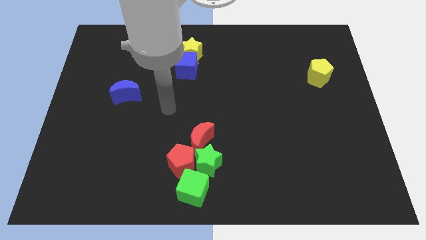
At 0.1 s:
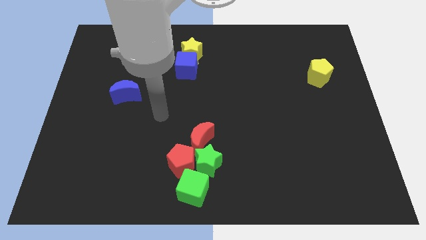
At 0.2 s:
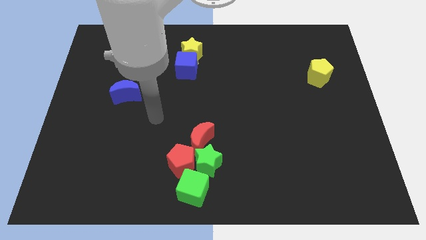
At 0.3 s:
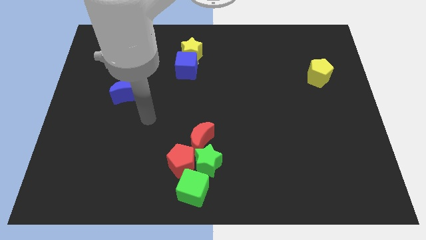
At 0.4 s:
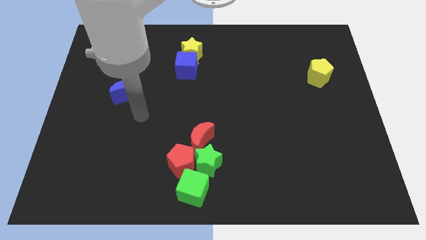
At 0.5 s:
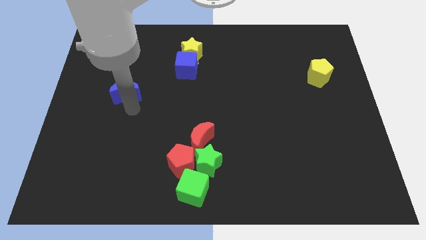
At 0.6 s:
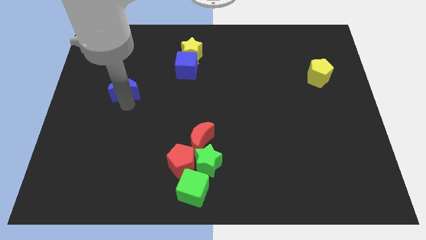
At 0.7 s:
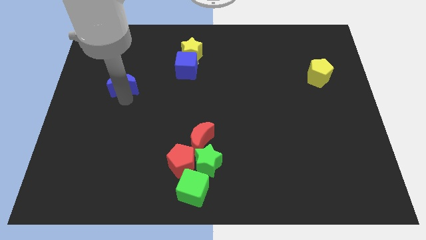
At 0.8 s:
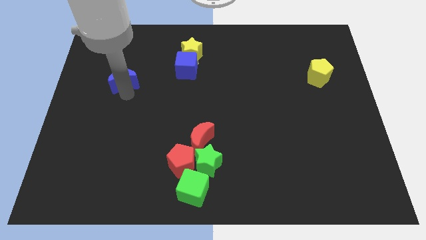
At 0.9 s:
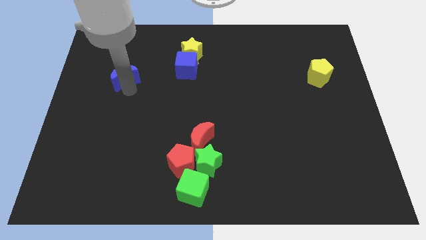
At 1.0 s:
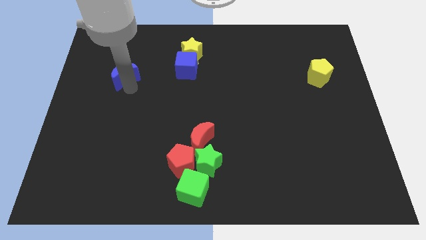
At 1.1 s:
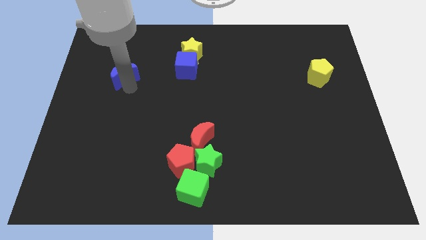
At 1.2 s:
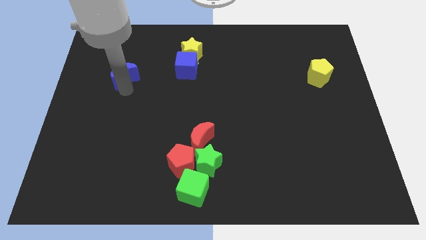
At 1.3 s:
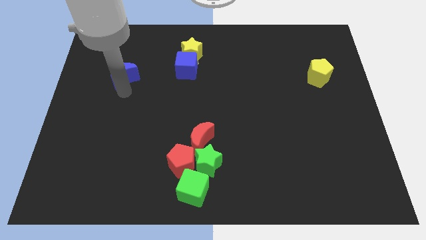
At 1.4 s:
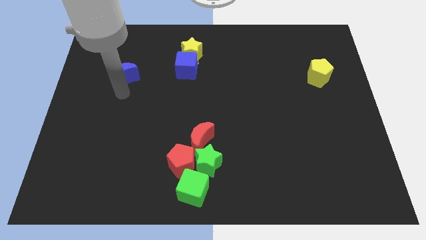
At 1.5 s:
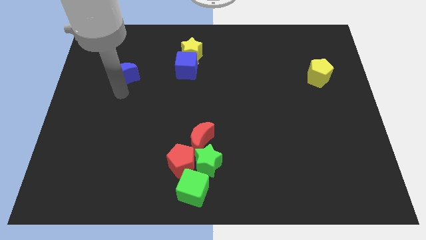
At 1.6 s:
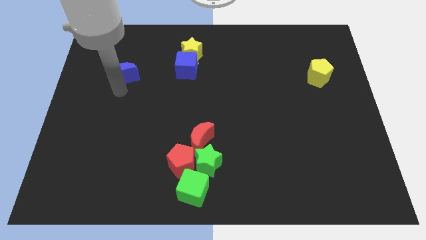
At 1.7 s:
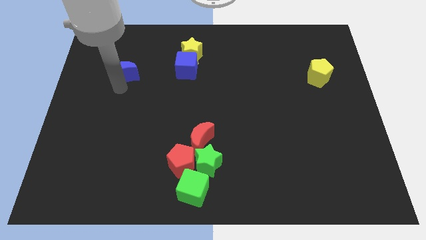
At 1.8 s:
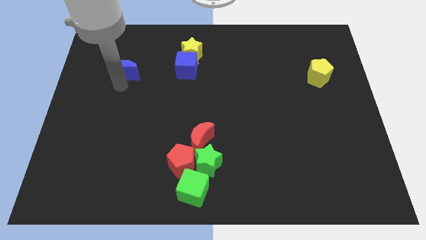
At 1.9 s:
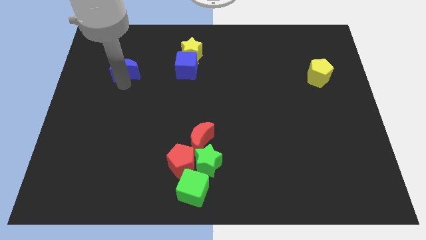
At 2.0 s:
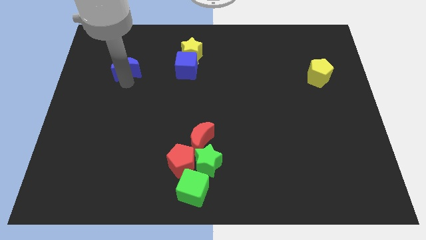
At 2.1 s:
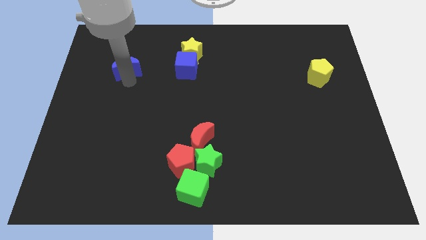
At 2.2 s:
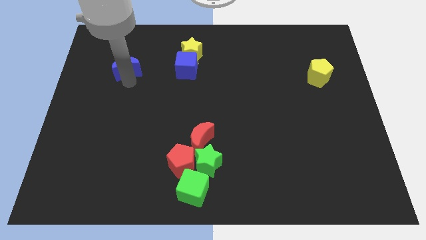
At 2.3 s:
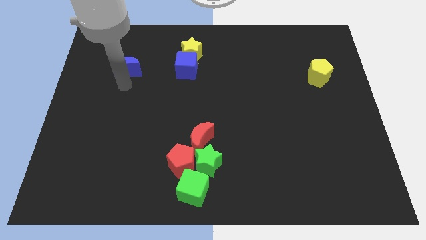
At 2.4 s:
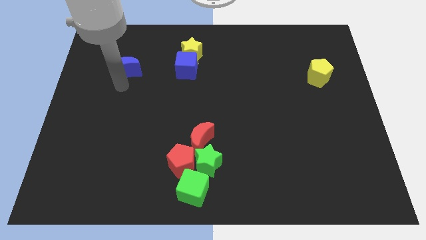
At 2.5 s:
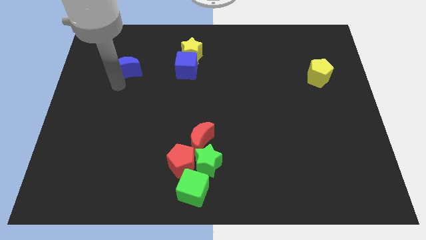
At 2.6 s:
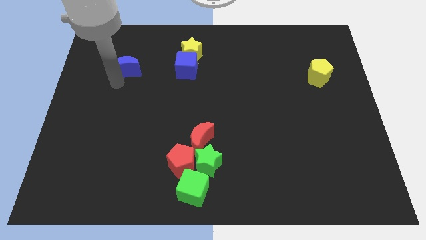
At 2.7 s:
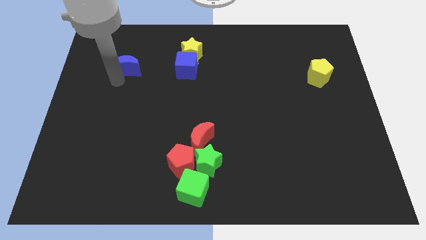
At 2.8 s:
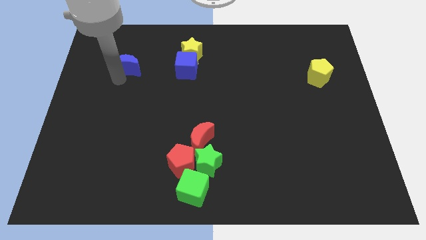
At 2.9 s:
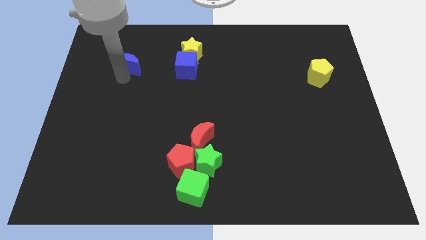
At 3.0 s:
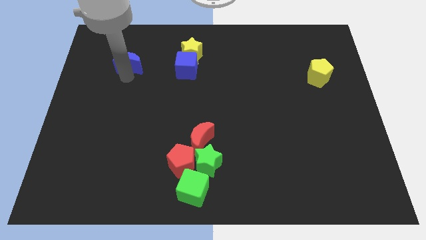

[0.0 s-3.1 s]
slightly push the blue crescent upwards of the board

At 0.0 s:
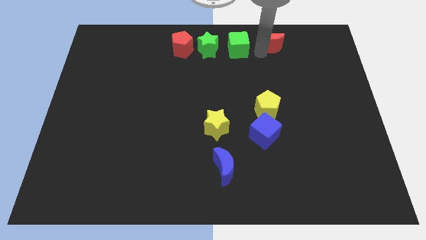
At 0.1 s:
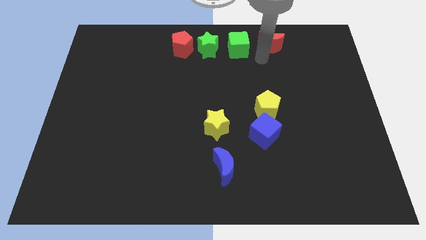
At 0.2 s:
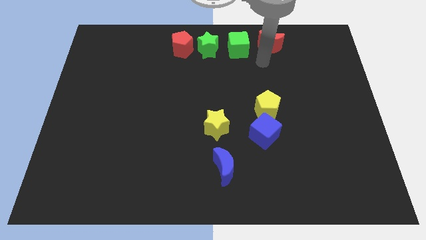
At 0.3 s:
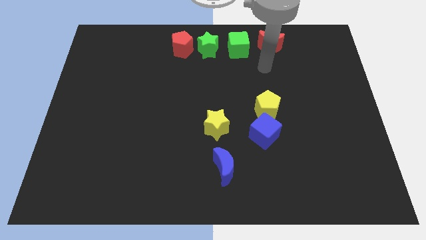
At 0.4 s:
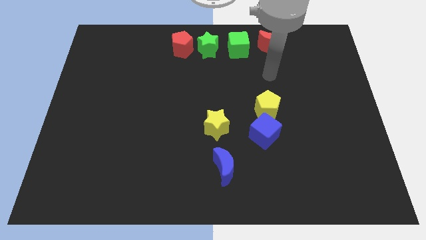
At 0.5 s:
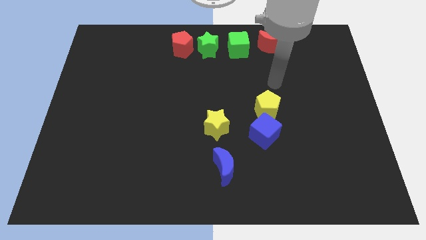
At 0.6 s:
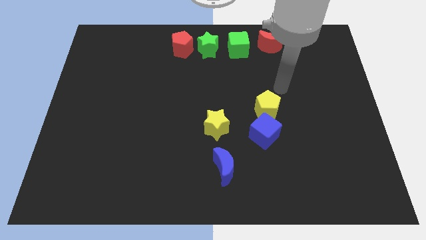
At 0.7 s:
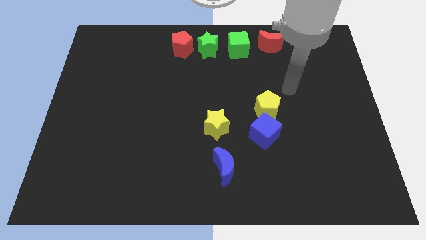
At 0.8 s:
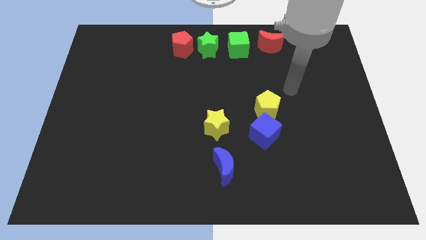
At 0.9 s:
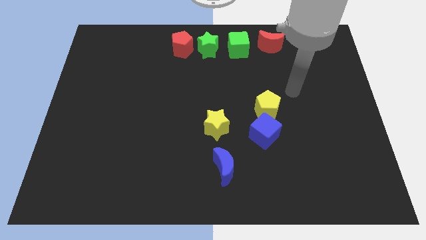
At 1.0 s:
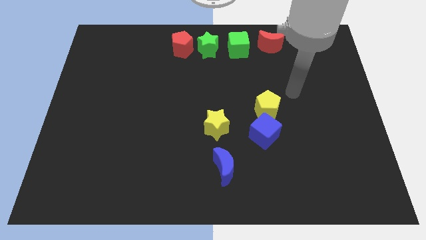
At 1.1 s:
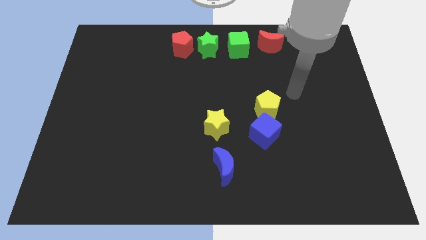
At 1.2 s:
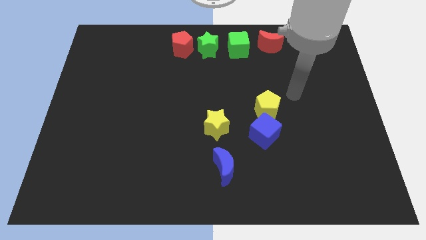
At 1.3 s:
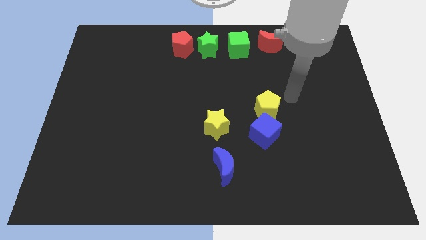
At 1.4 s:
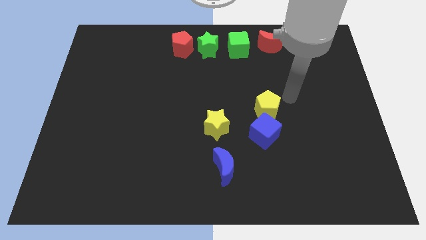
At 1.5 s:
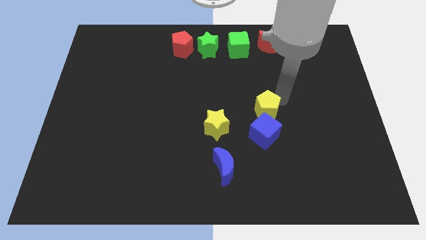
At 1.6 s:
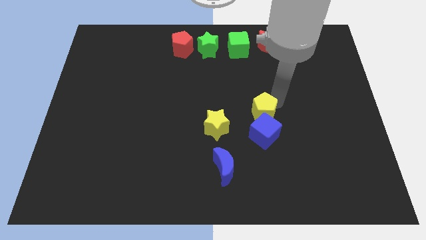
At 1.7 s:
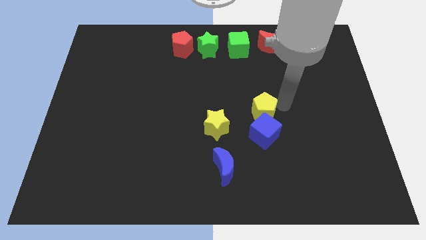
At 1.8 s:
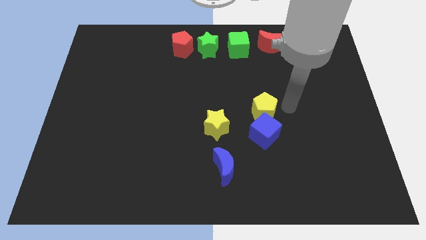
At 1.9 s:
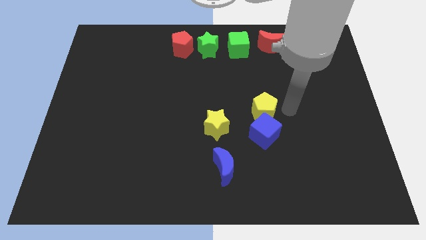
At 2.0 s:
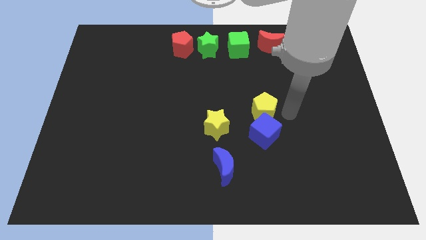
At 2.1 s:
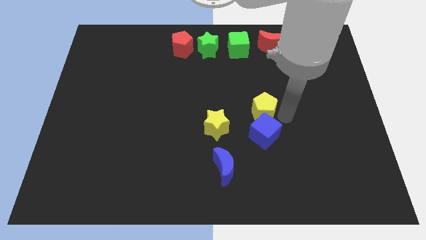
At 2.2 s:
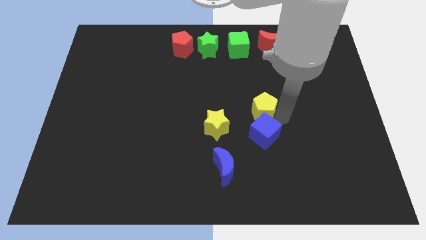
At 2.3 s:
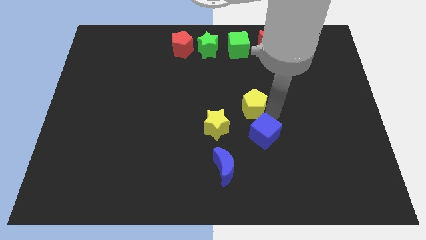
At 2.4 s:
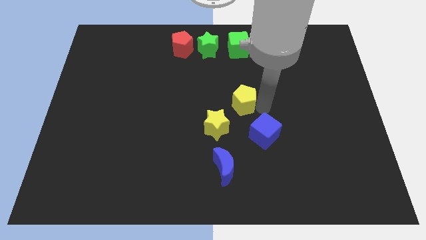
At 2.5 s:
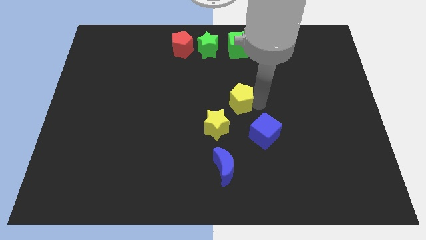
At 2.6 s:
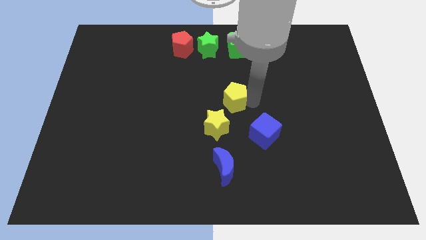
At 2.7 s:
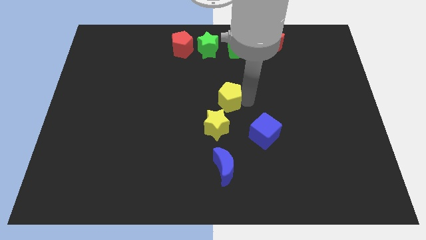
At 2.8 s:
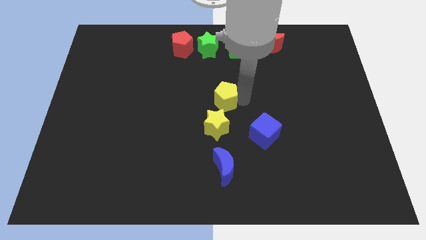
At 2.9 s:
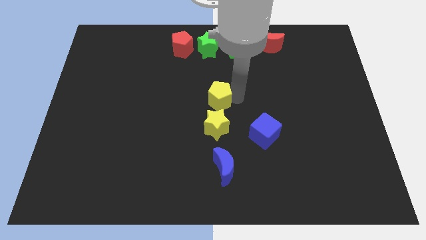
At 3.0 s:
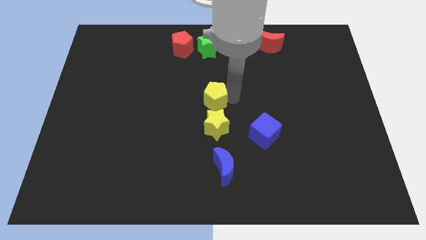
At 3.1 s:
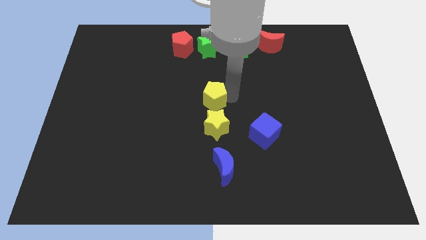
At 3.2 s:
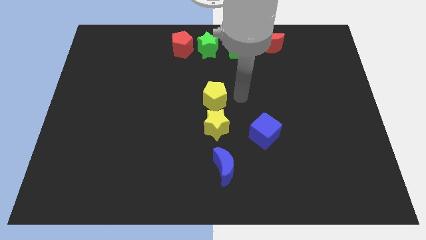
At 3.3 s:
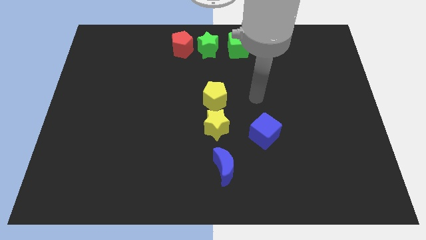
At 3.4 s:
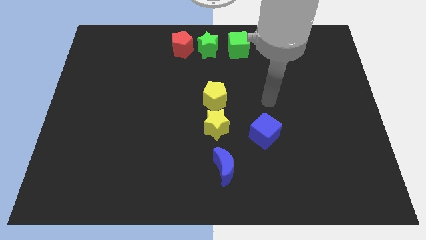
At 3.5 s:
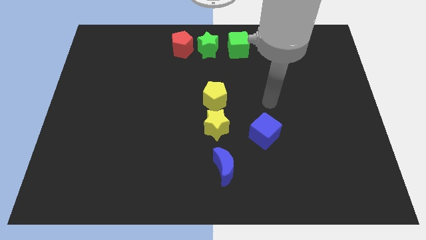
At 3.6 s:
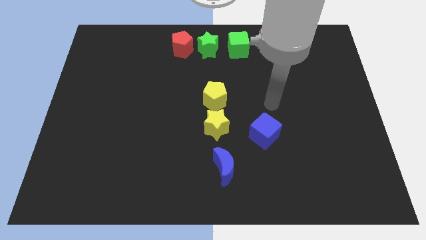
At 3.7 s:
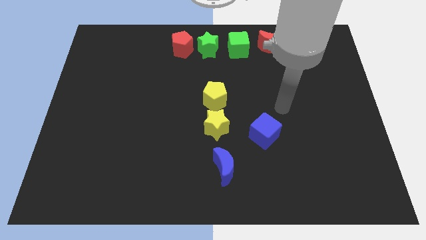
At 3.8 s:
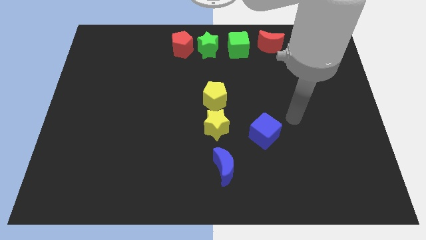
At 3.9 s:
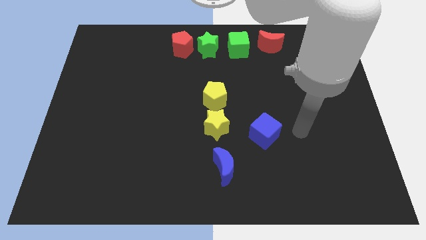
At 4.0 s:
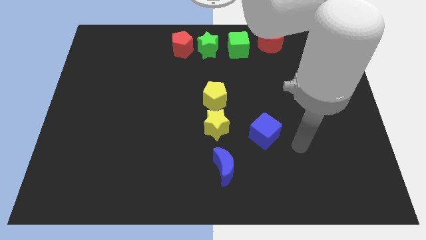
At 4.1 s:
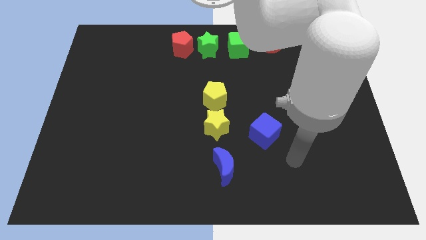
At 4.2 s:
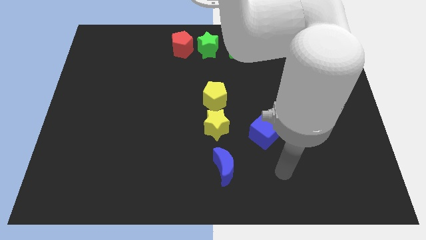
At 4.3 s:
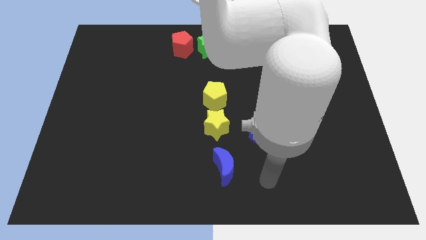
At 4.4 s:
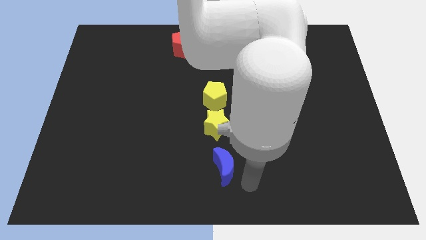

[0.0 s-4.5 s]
place the yellow pentagon in between the green star and yellow star

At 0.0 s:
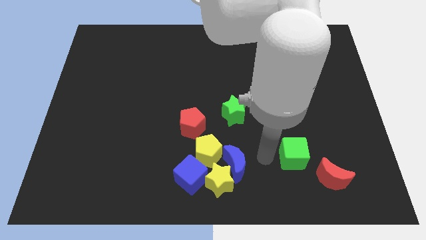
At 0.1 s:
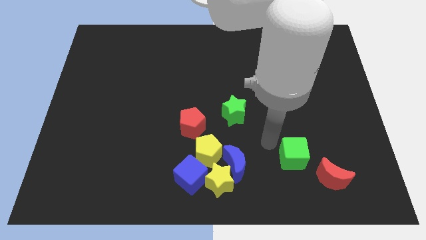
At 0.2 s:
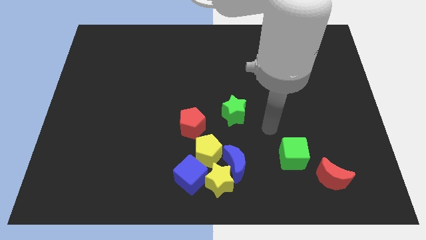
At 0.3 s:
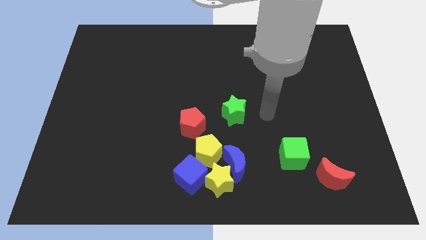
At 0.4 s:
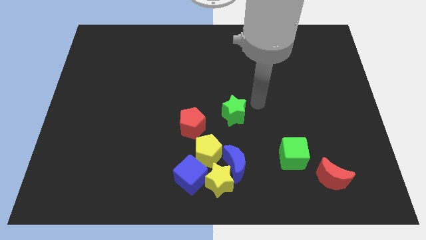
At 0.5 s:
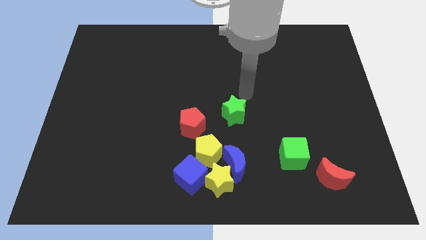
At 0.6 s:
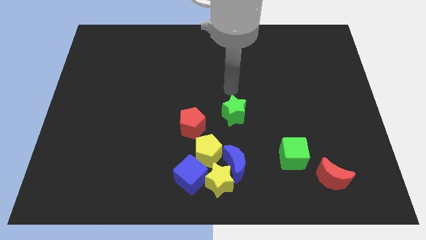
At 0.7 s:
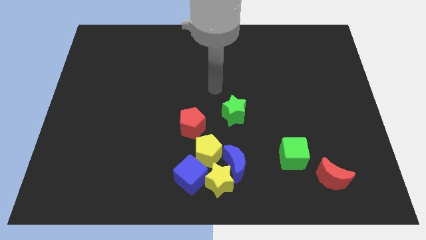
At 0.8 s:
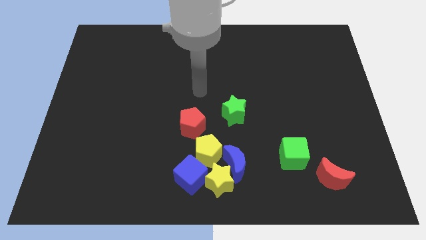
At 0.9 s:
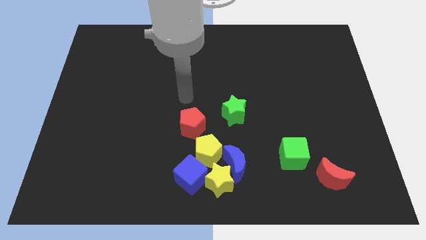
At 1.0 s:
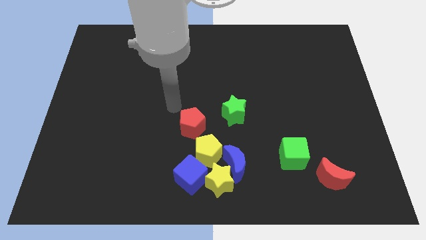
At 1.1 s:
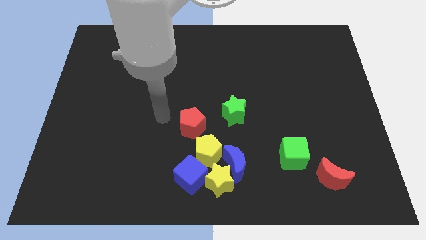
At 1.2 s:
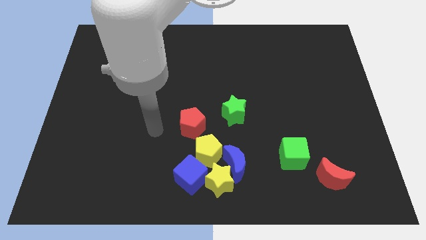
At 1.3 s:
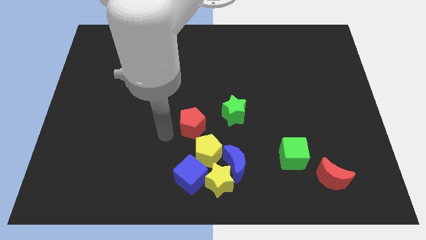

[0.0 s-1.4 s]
move the arm to the left of the red pentagon
